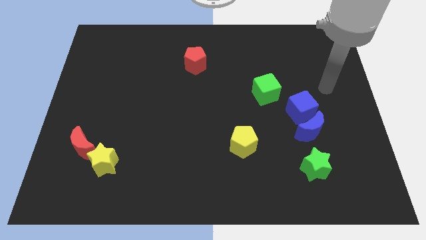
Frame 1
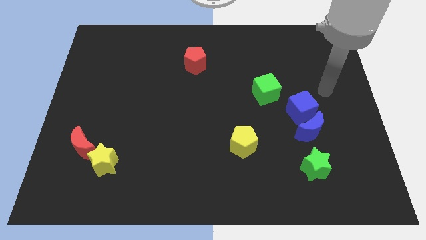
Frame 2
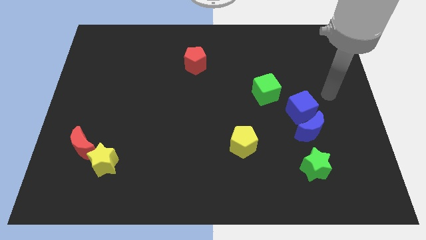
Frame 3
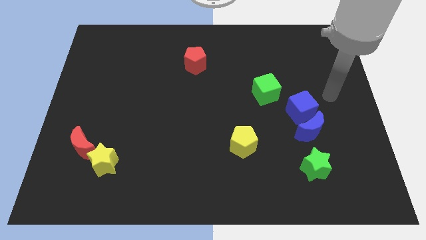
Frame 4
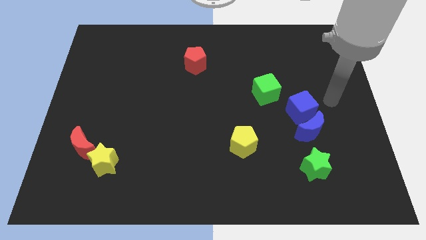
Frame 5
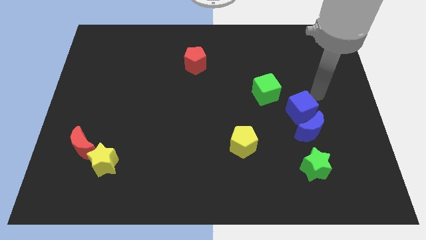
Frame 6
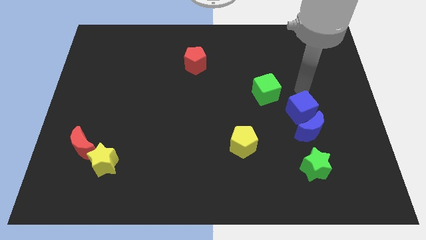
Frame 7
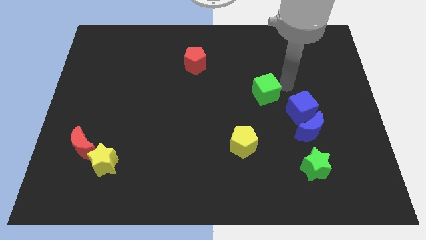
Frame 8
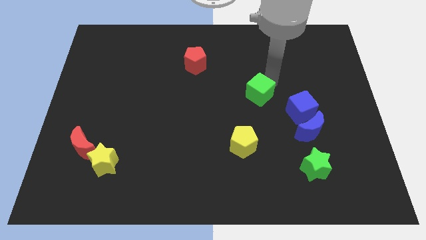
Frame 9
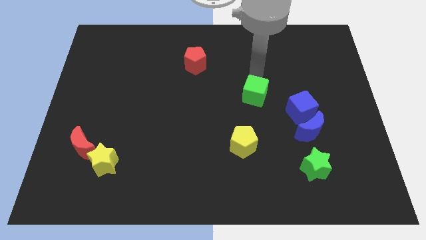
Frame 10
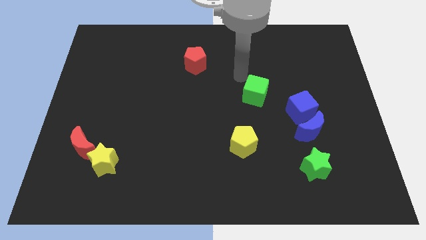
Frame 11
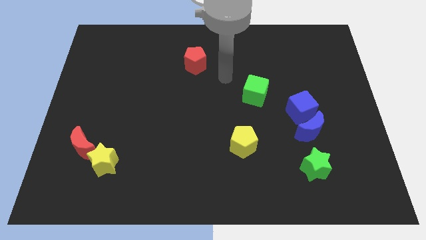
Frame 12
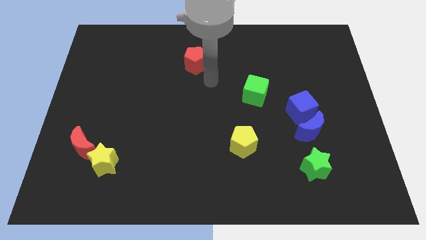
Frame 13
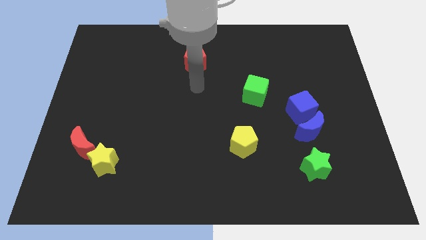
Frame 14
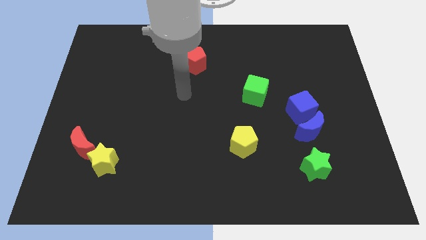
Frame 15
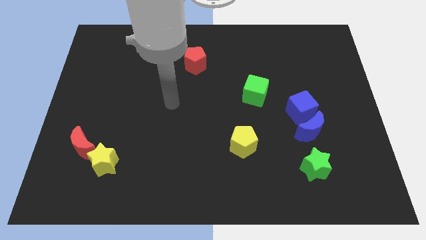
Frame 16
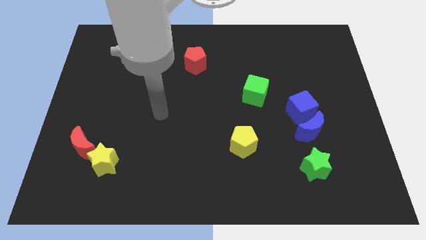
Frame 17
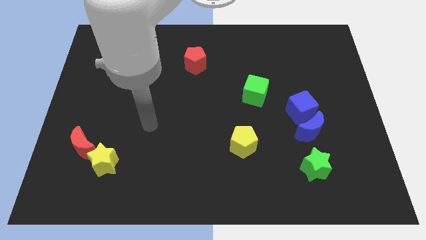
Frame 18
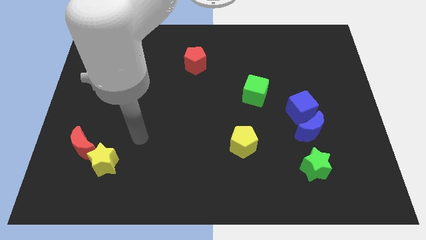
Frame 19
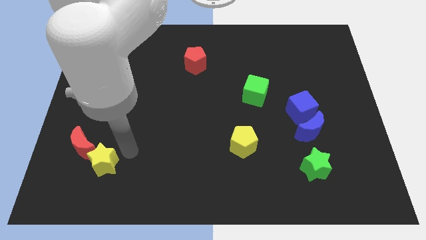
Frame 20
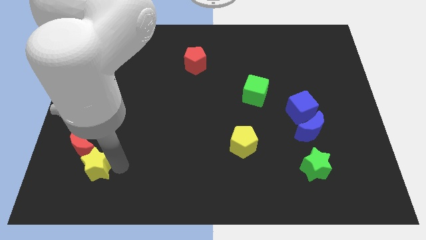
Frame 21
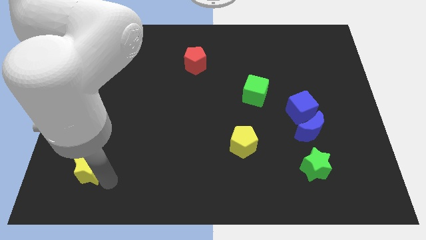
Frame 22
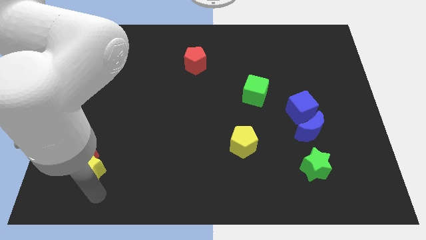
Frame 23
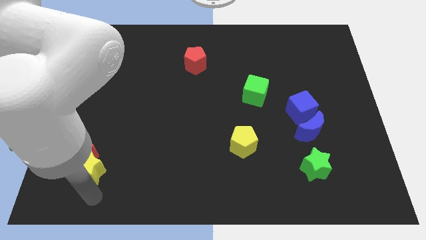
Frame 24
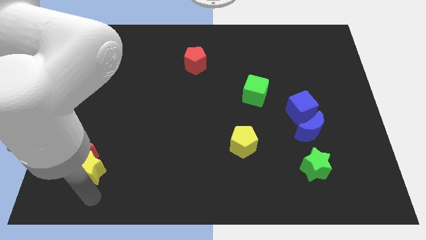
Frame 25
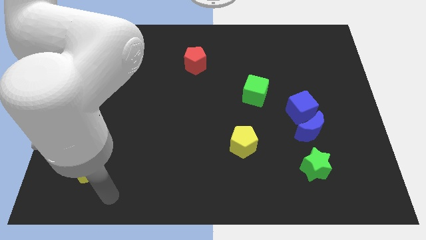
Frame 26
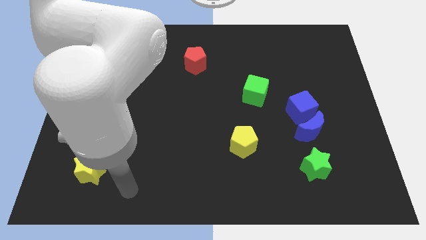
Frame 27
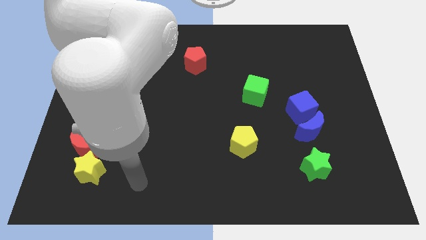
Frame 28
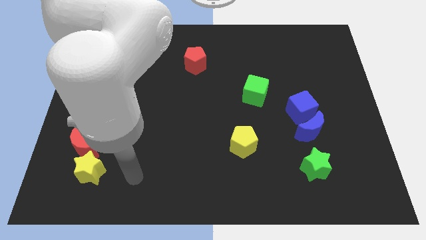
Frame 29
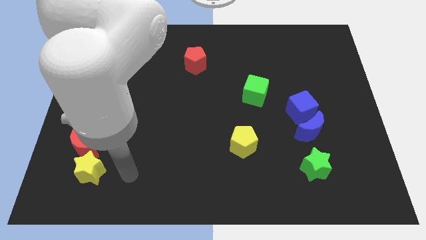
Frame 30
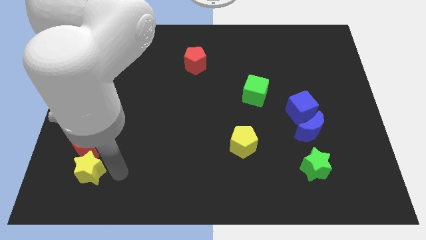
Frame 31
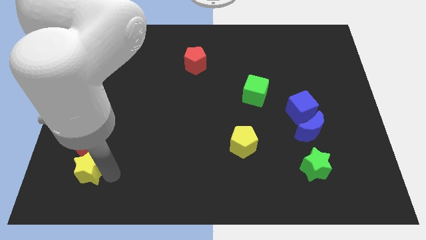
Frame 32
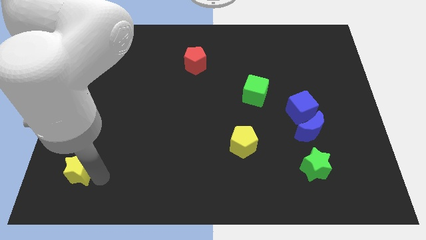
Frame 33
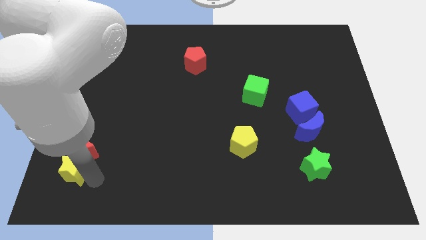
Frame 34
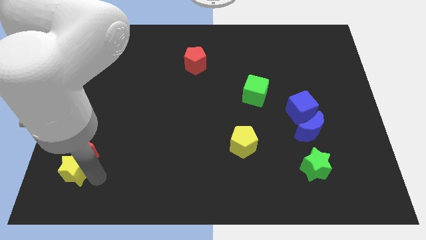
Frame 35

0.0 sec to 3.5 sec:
slightly push the green cube and yellow star towards left

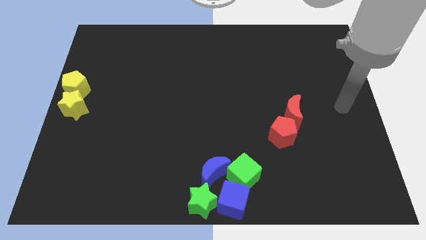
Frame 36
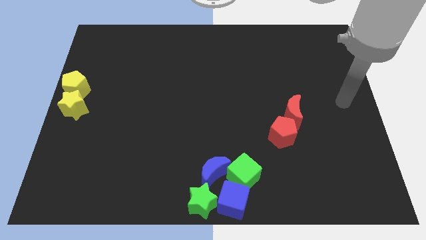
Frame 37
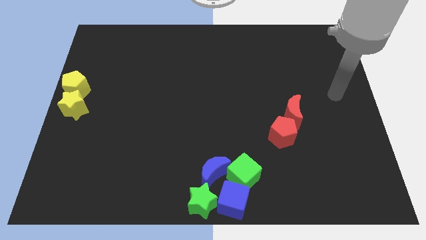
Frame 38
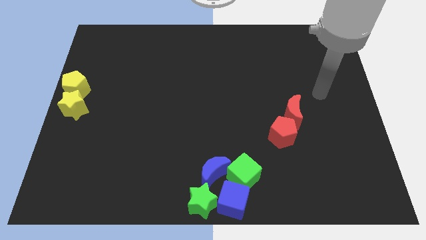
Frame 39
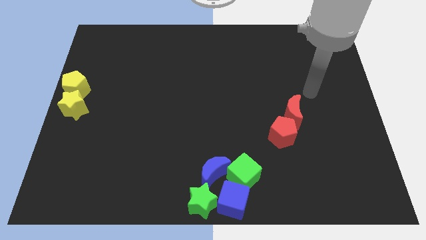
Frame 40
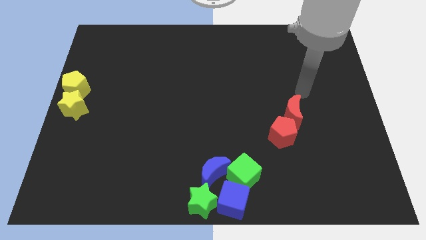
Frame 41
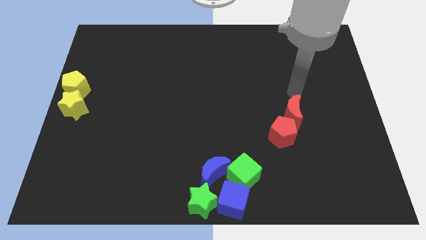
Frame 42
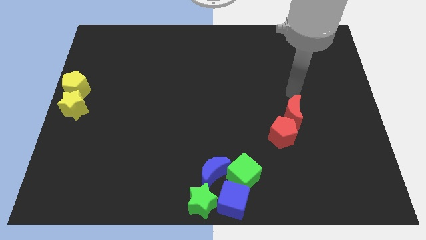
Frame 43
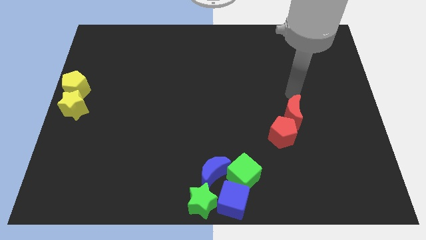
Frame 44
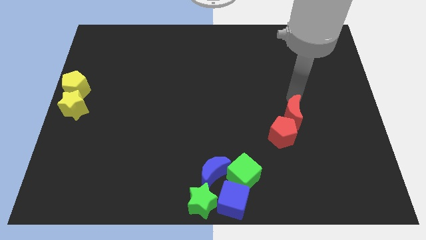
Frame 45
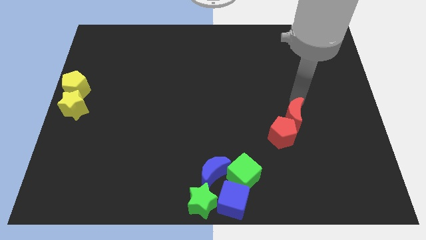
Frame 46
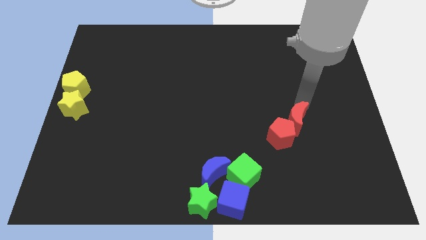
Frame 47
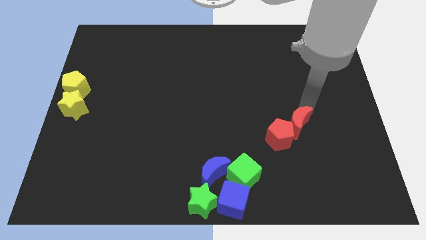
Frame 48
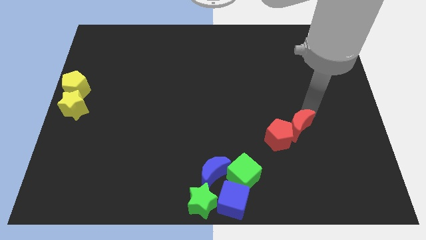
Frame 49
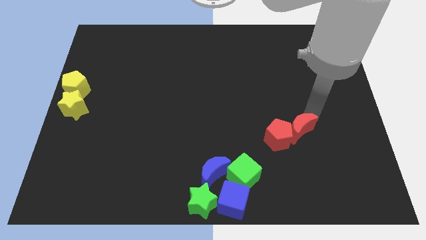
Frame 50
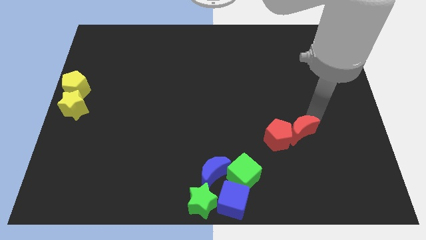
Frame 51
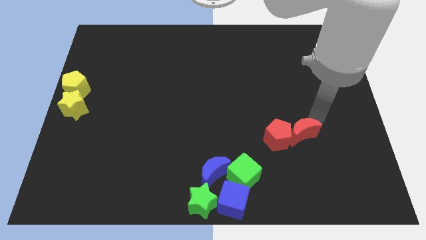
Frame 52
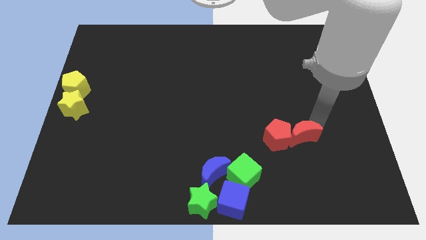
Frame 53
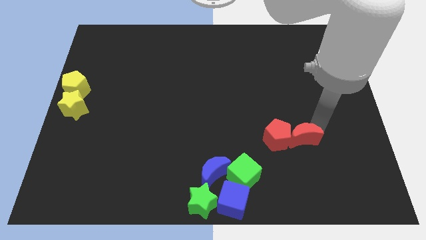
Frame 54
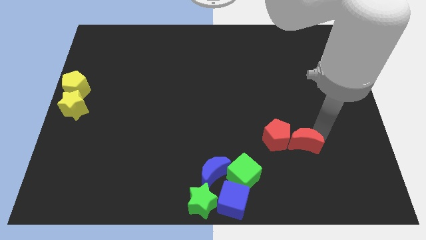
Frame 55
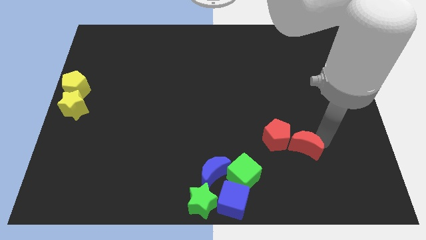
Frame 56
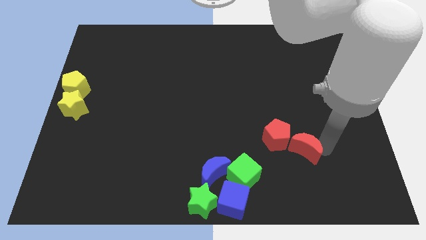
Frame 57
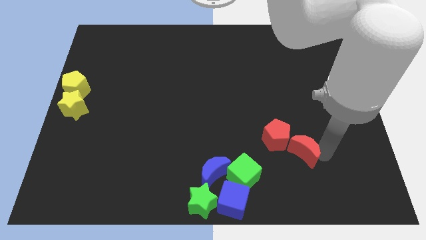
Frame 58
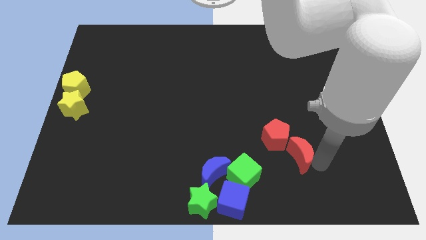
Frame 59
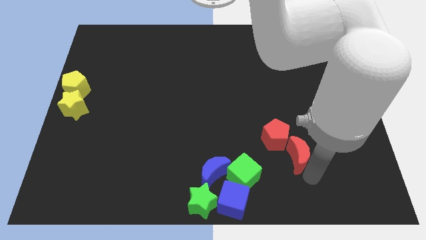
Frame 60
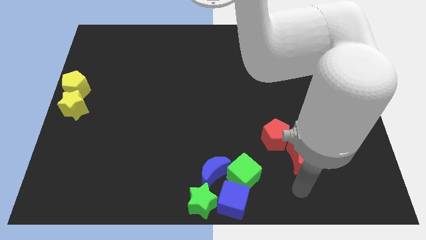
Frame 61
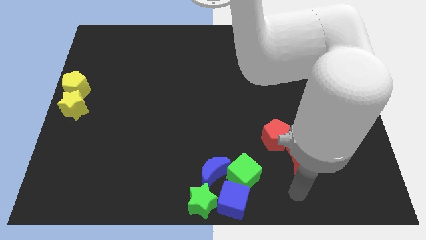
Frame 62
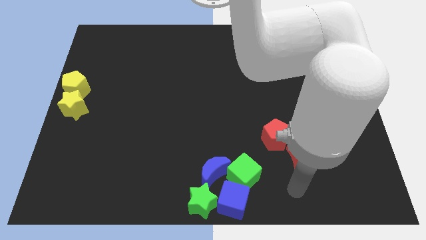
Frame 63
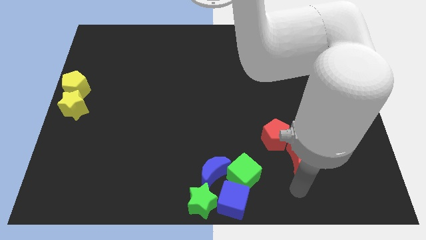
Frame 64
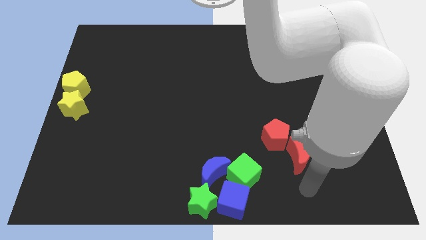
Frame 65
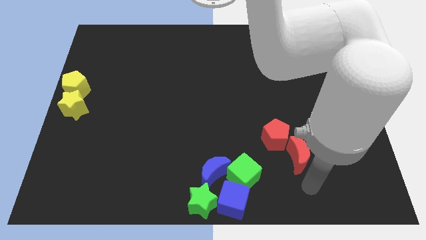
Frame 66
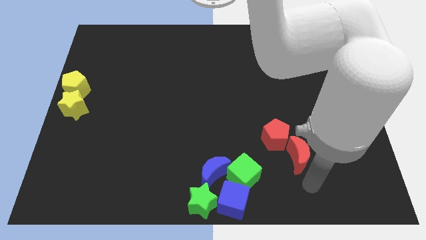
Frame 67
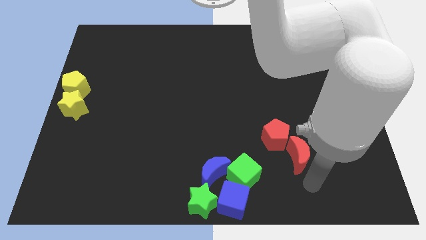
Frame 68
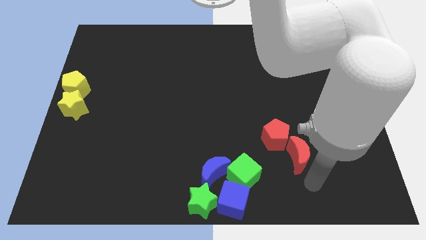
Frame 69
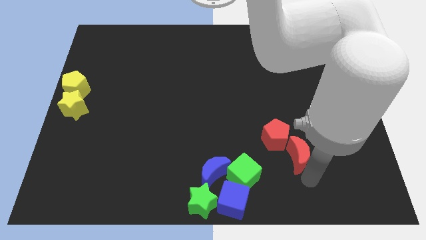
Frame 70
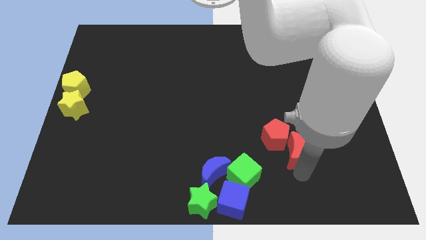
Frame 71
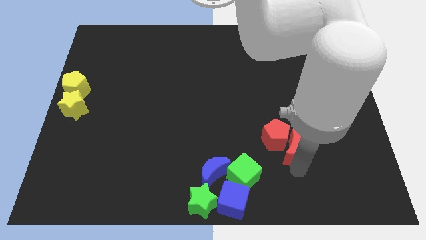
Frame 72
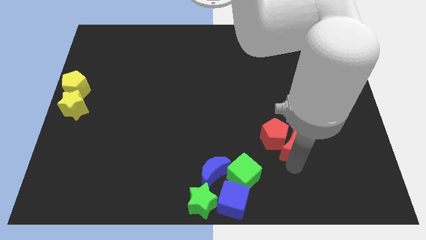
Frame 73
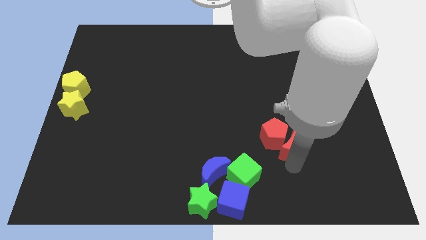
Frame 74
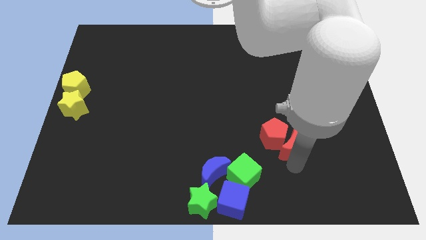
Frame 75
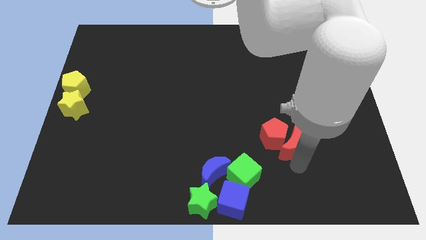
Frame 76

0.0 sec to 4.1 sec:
place the red crescent to the right side of the red pentagon

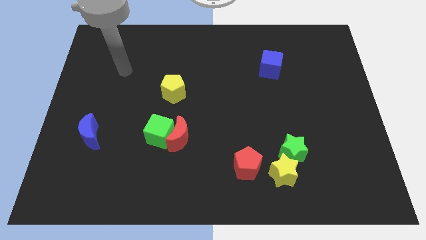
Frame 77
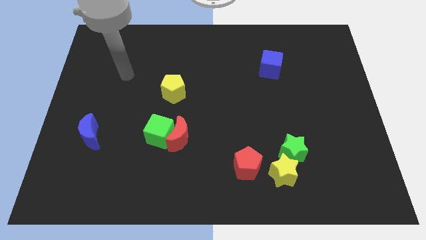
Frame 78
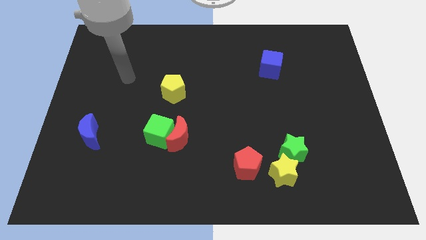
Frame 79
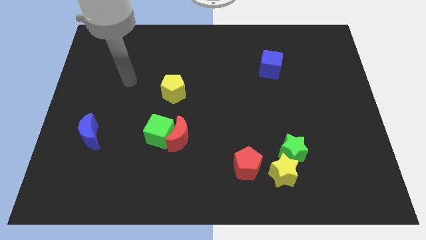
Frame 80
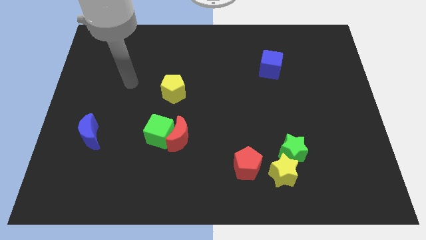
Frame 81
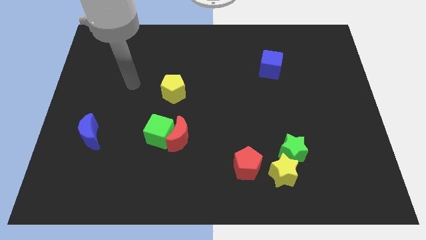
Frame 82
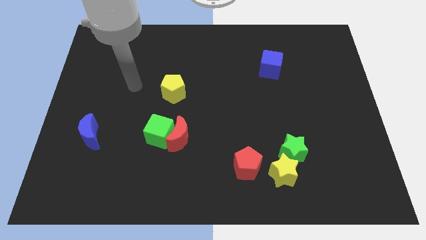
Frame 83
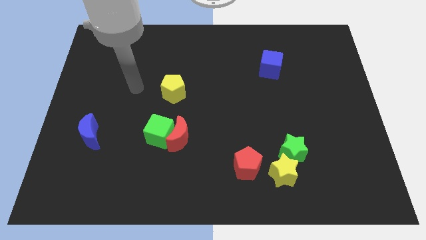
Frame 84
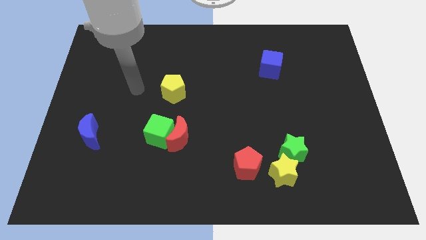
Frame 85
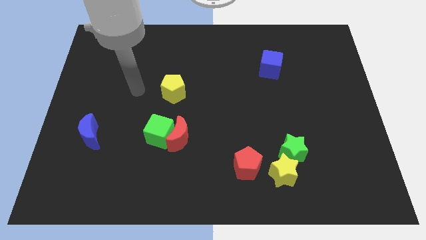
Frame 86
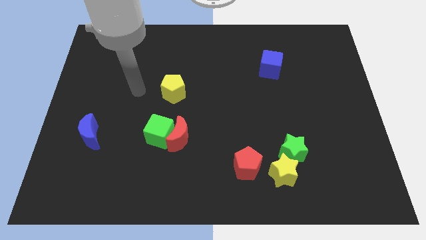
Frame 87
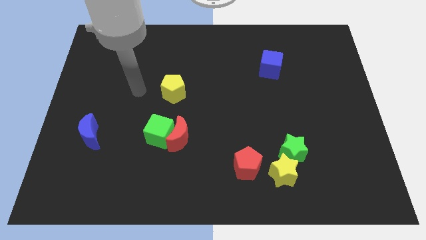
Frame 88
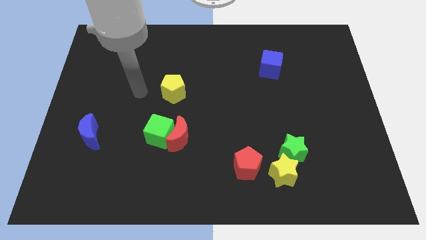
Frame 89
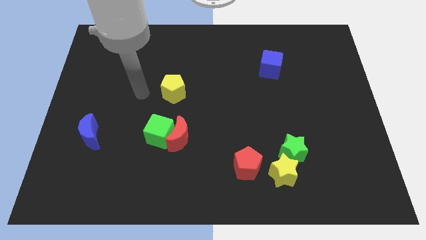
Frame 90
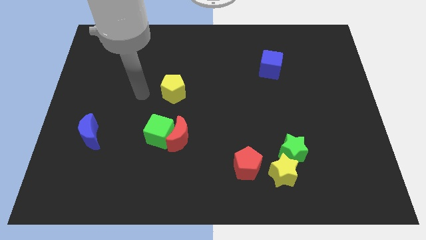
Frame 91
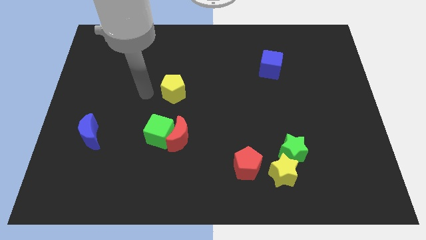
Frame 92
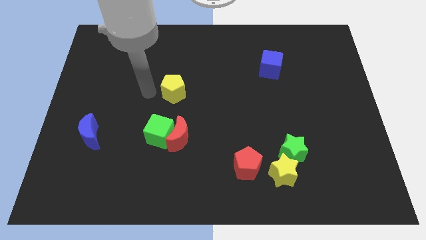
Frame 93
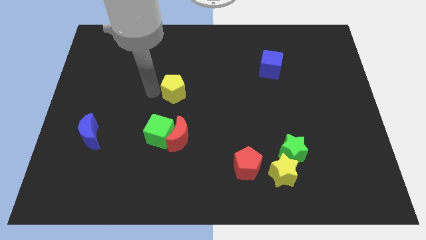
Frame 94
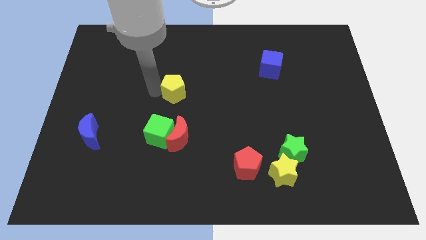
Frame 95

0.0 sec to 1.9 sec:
point your arm at the left side of the yellow pentagon
